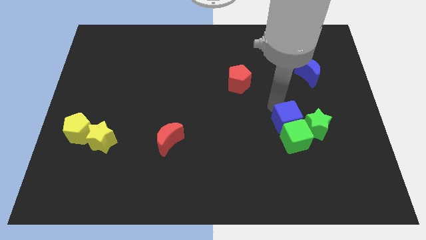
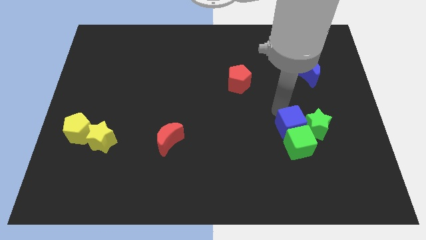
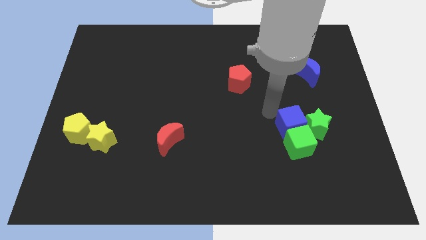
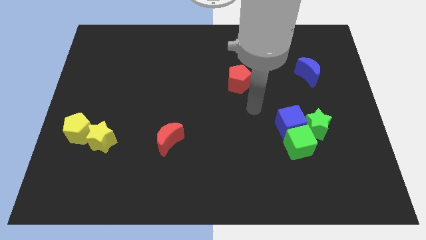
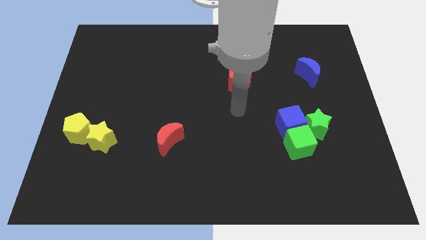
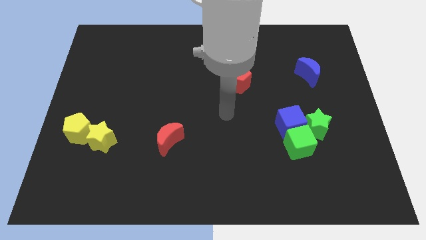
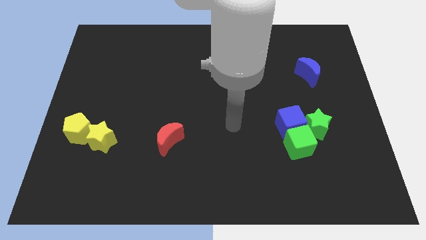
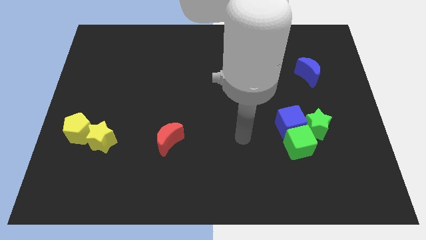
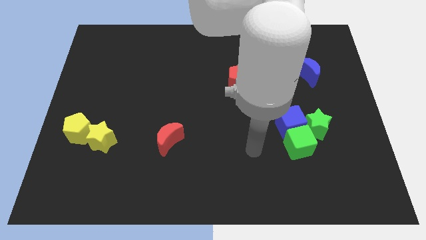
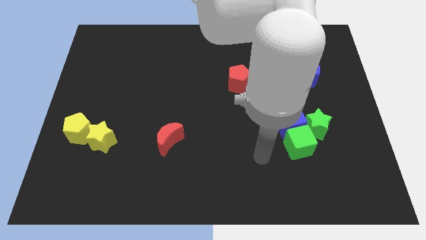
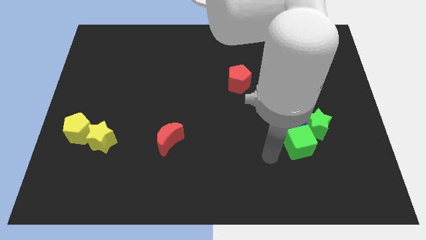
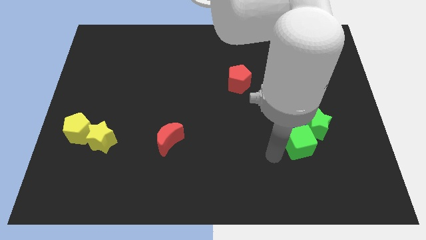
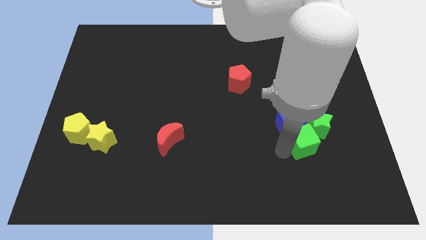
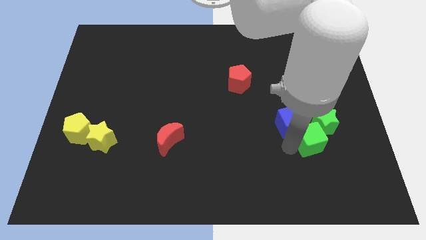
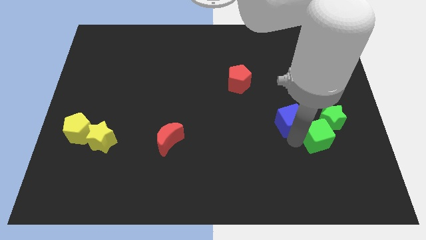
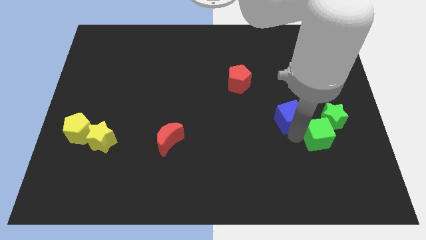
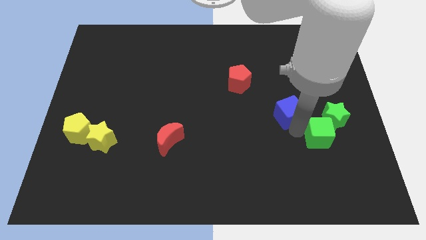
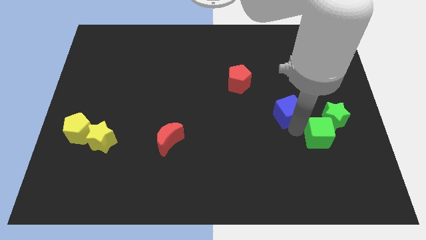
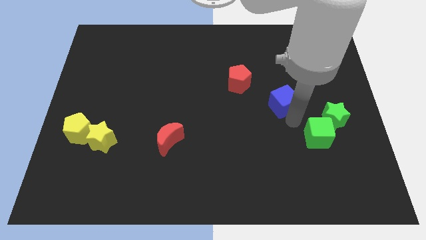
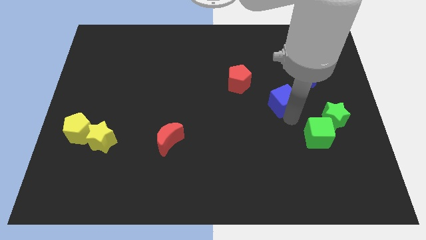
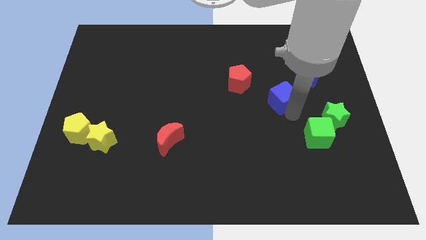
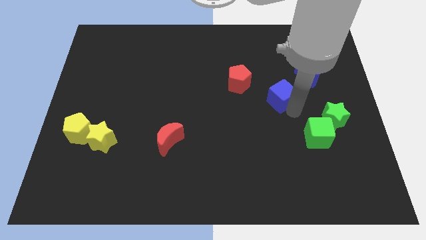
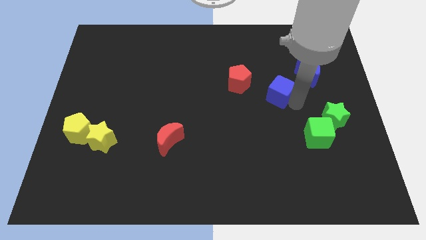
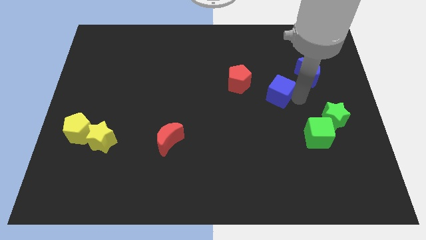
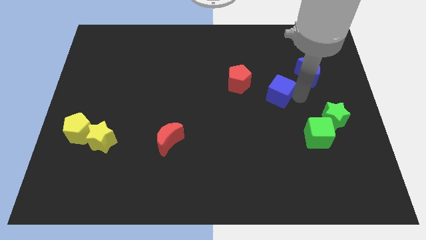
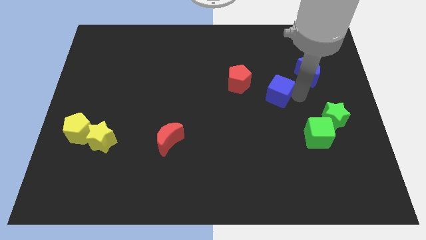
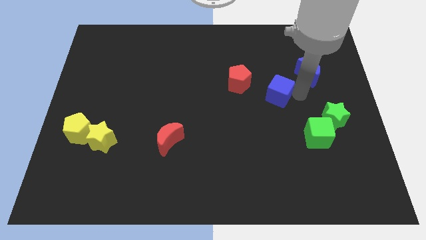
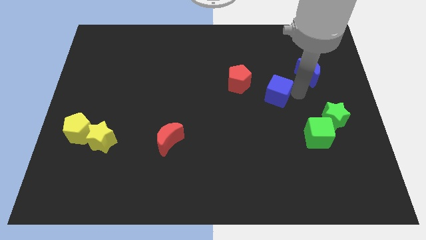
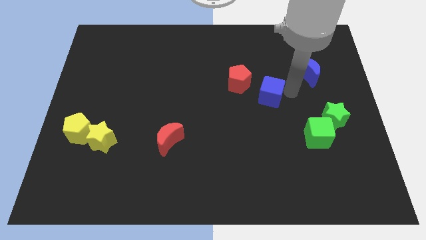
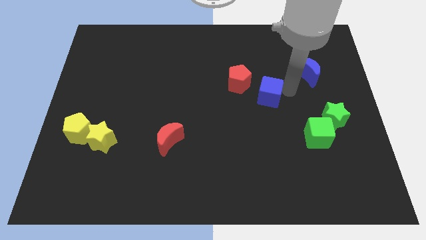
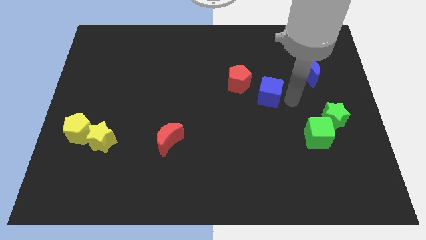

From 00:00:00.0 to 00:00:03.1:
separate blue cube from the green blocks

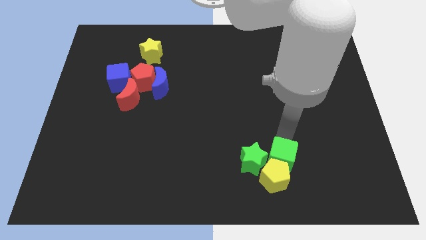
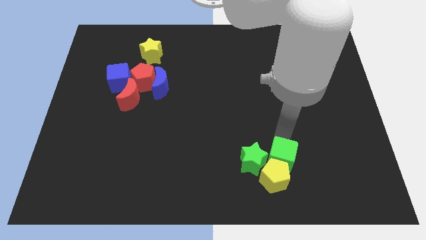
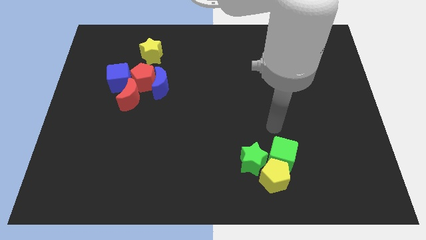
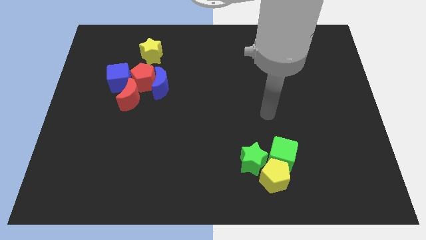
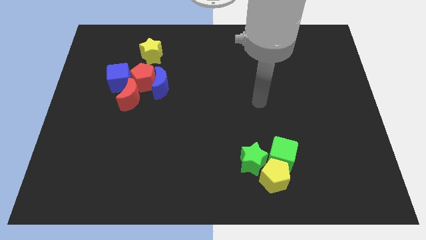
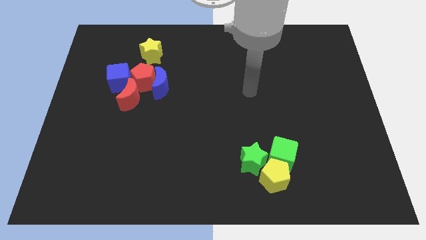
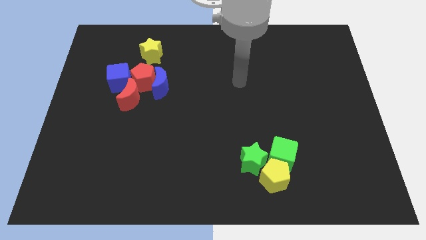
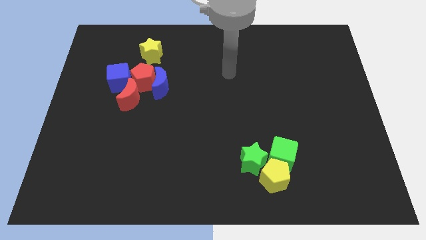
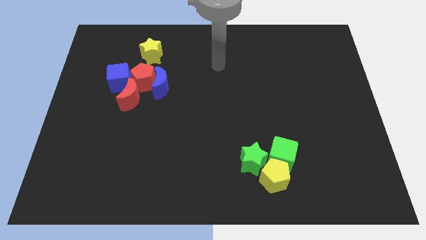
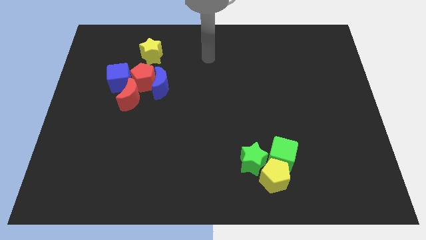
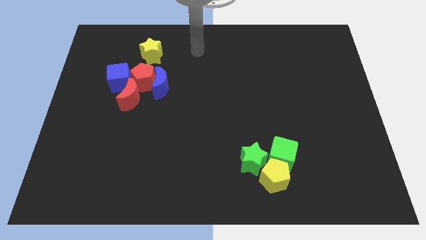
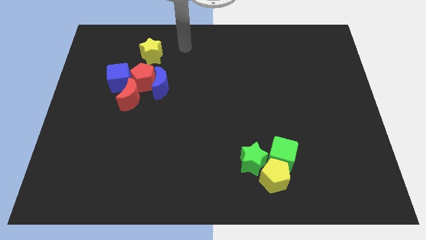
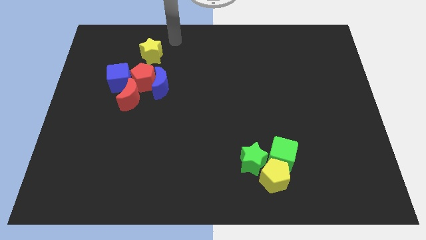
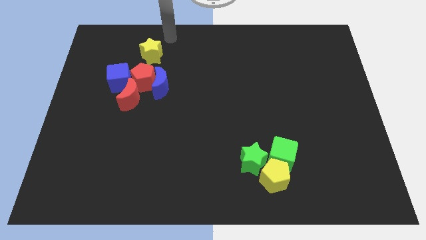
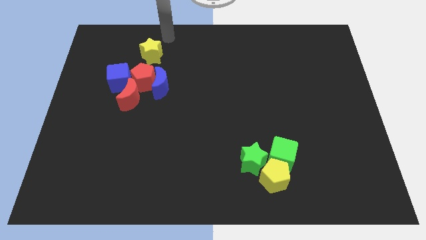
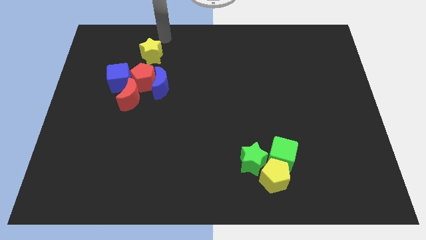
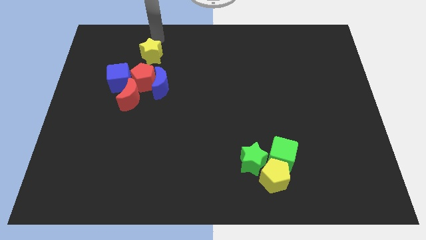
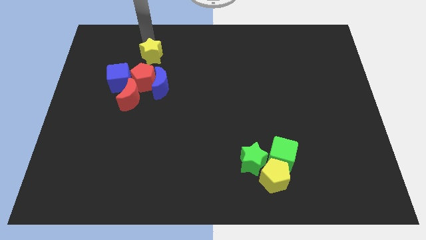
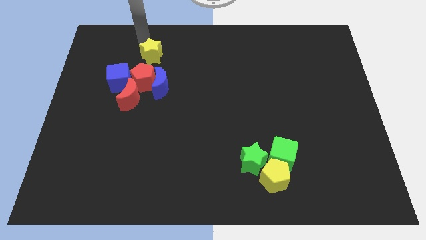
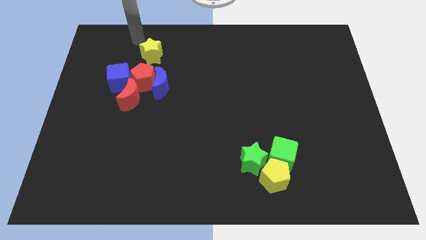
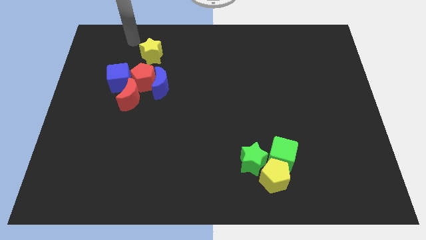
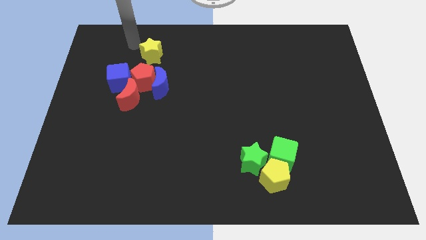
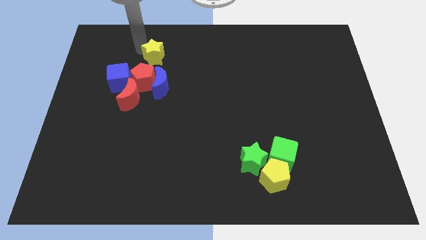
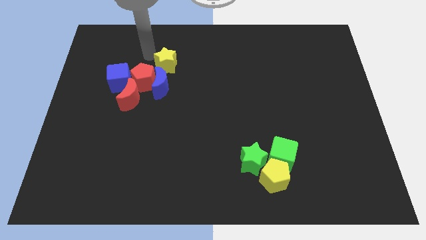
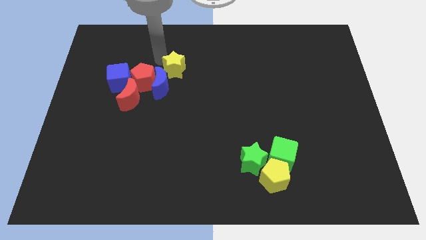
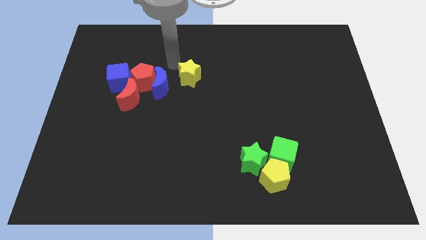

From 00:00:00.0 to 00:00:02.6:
move the arm away from the green cube

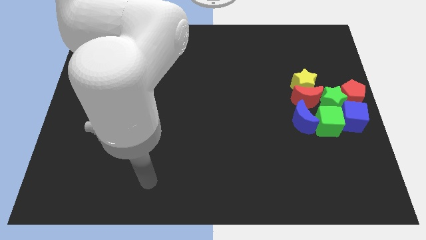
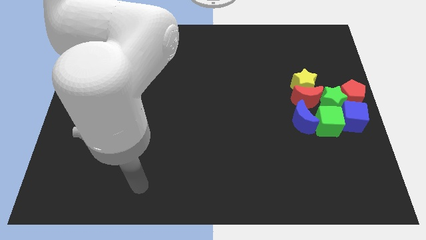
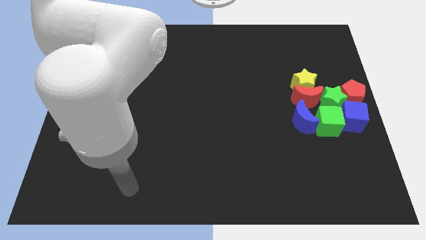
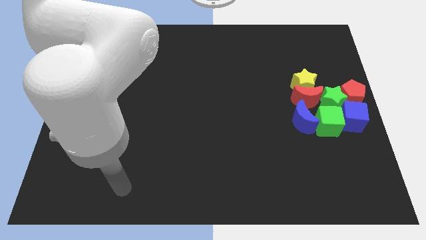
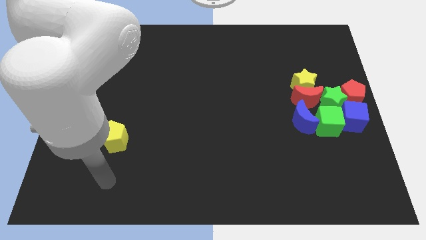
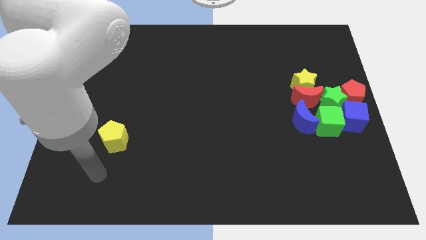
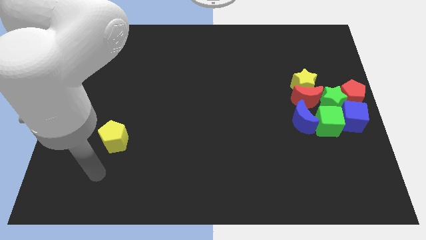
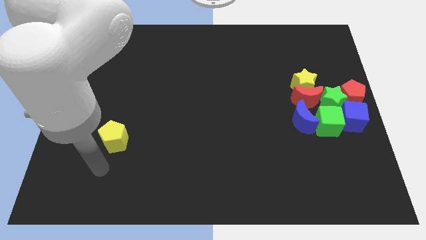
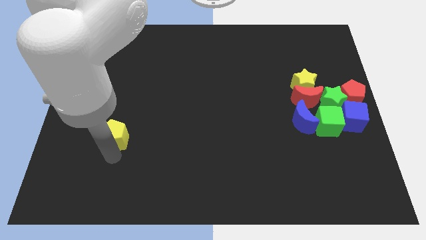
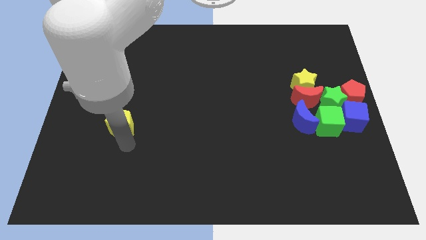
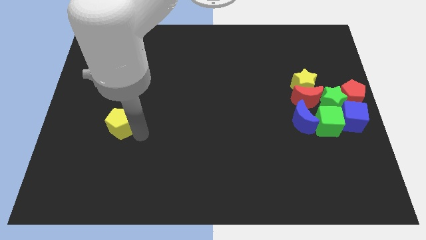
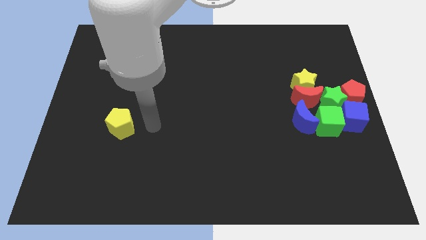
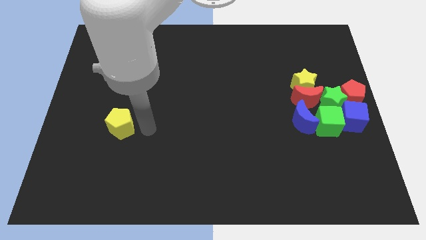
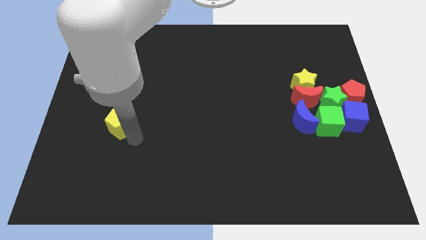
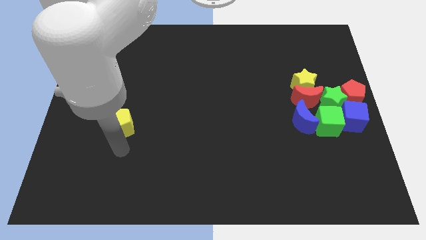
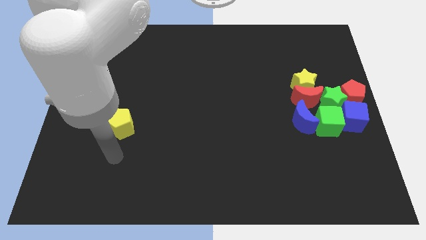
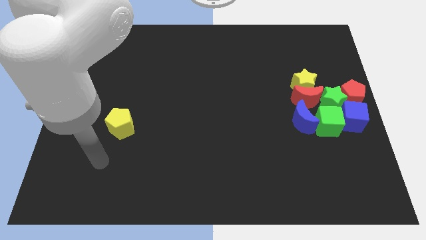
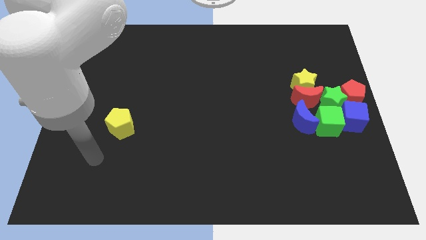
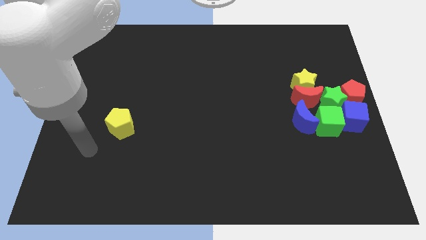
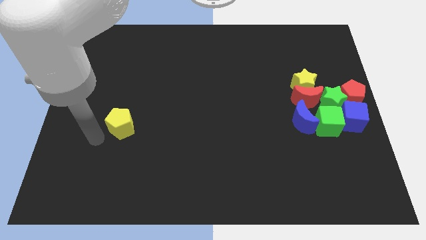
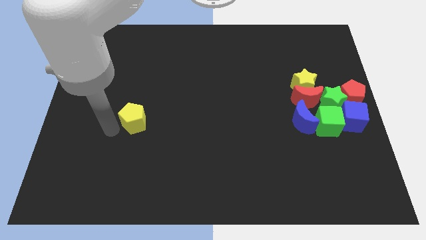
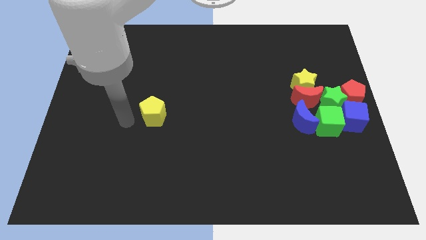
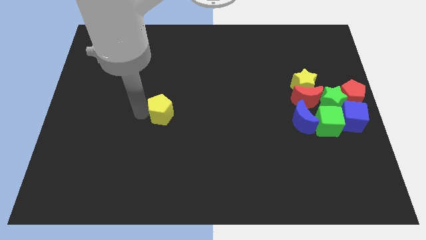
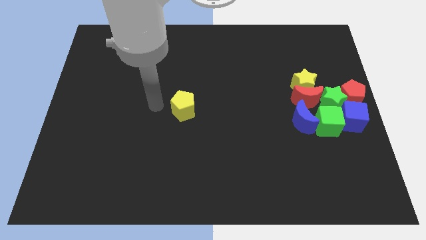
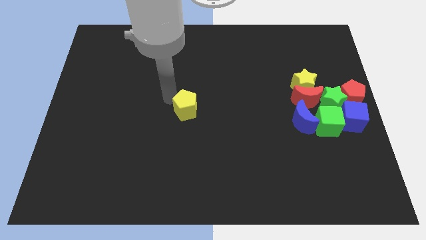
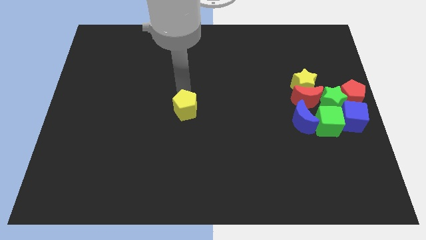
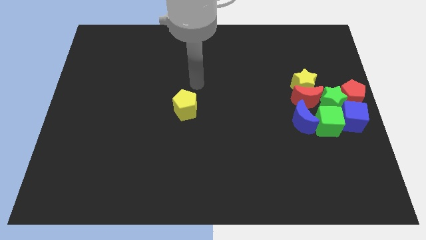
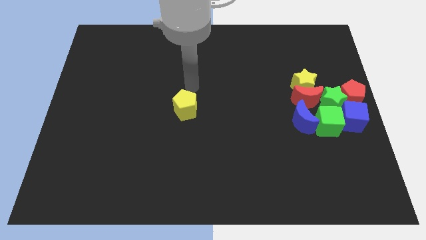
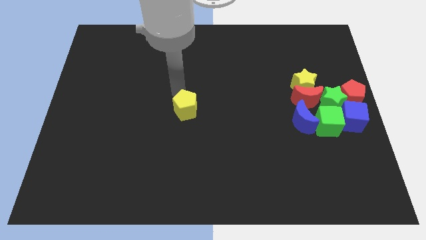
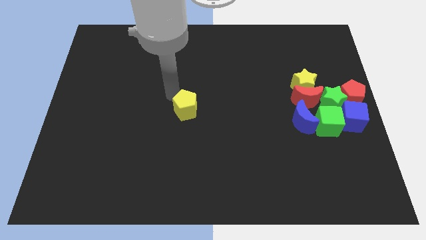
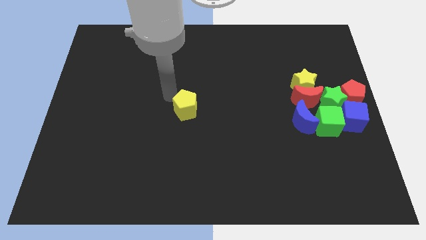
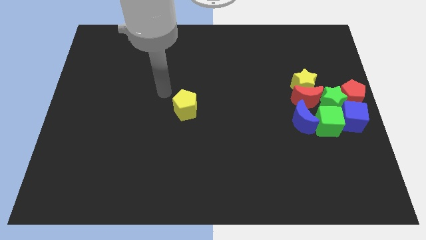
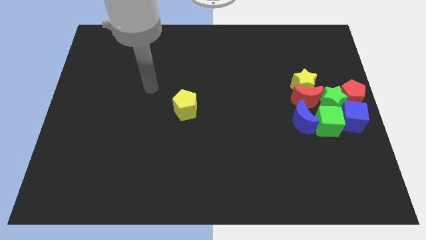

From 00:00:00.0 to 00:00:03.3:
move yellow pentagon to center
